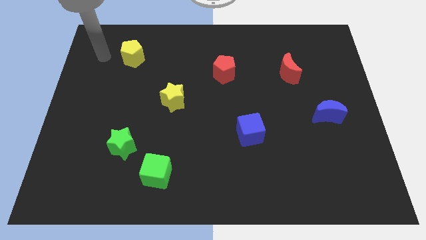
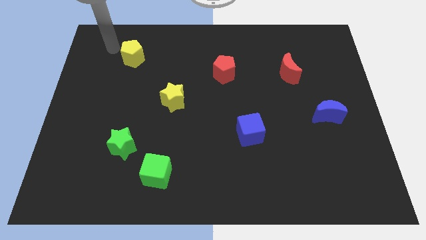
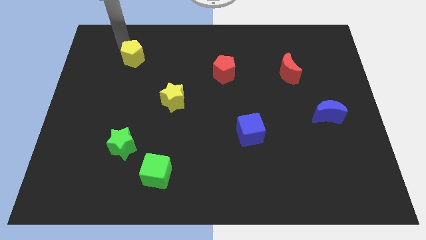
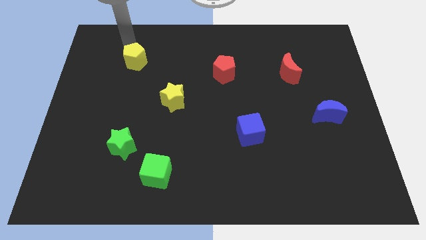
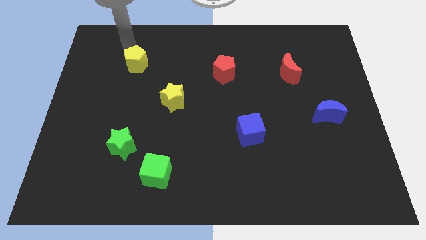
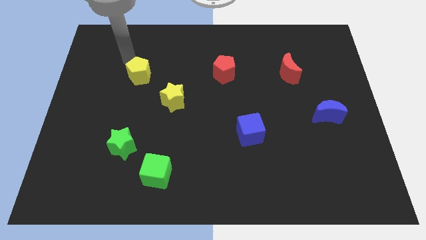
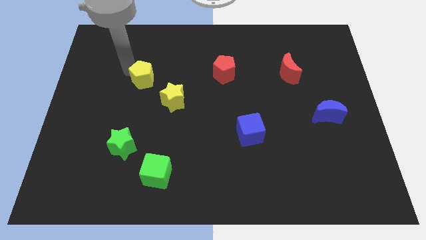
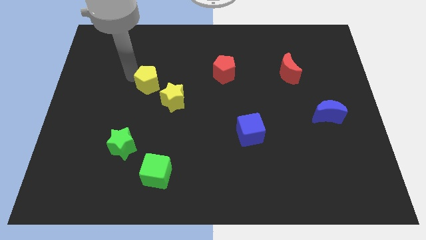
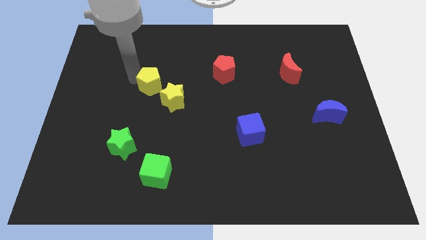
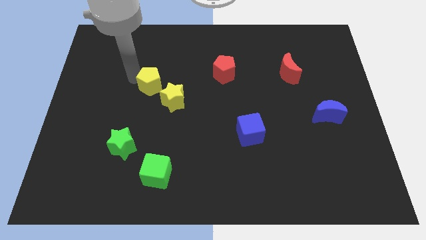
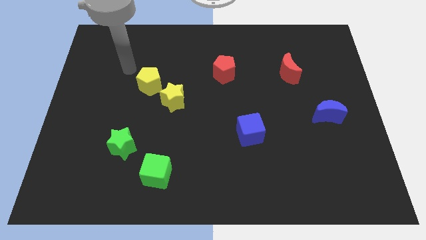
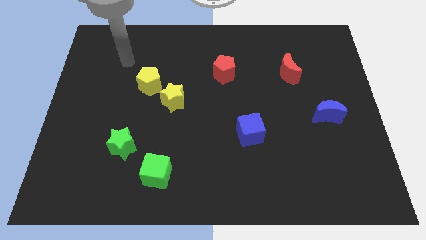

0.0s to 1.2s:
push the yellow pentagon above the yellow star

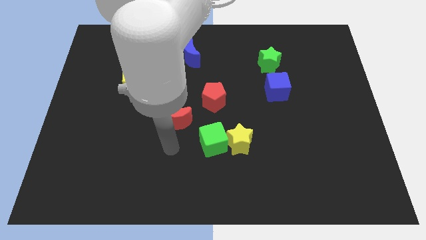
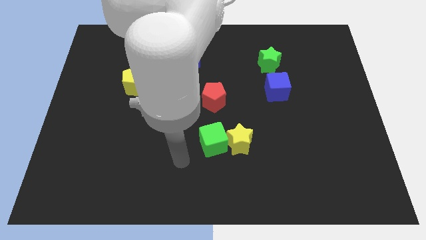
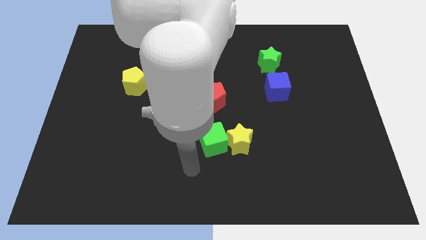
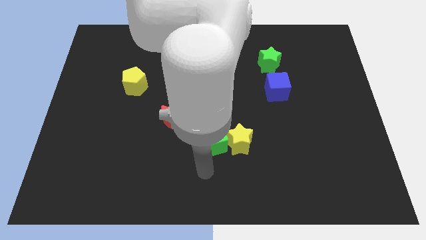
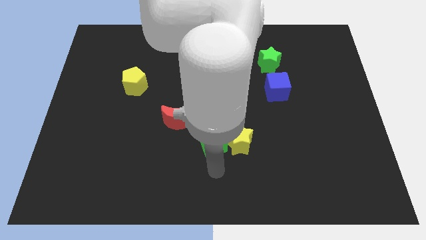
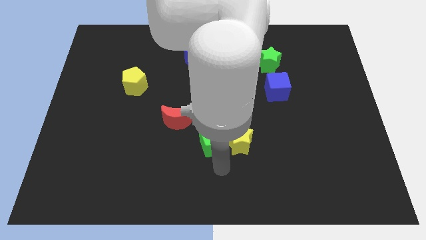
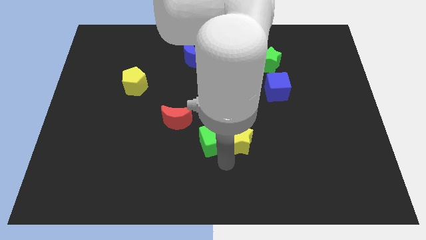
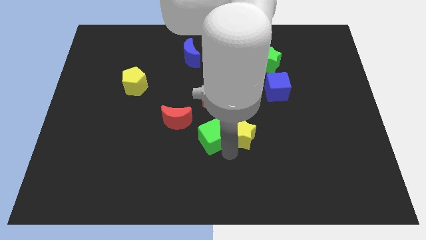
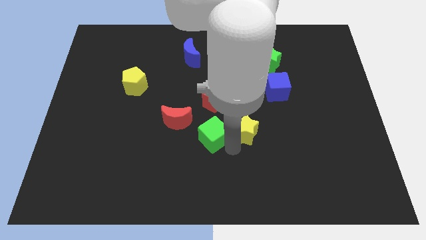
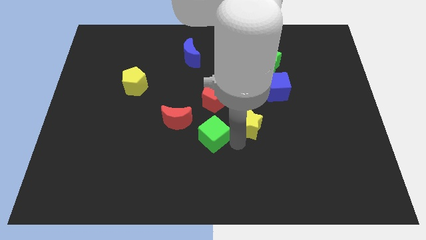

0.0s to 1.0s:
move the arm slightly to the yellow star

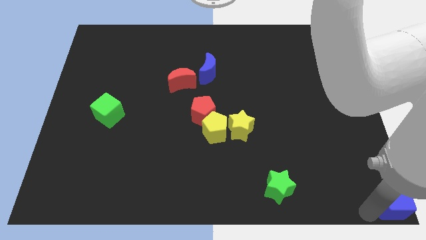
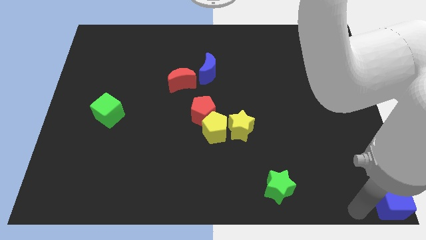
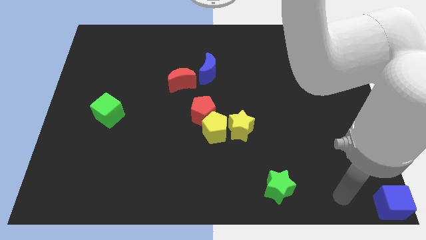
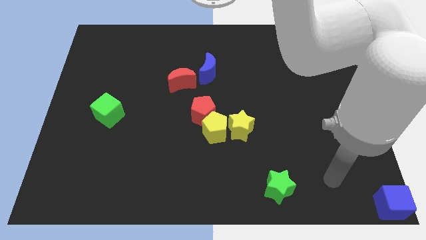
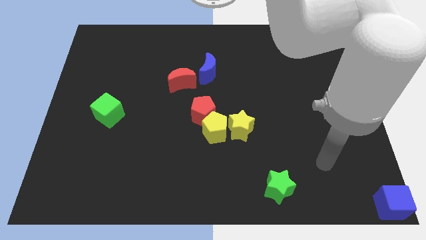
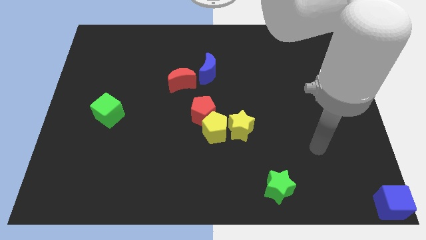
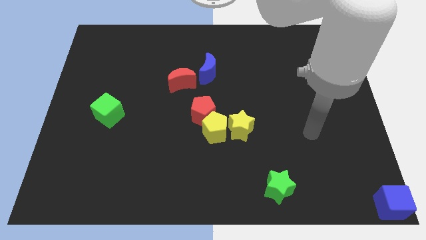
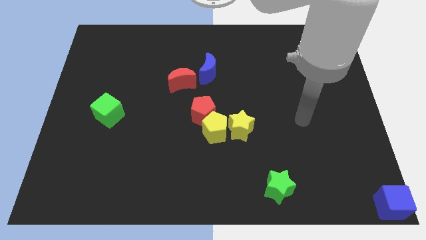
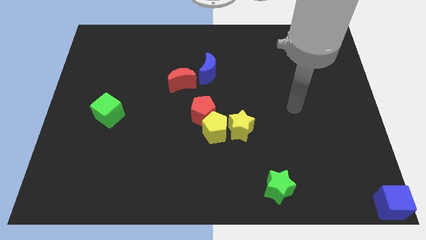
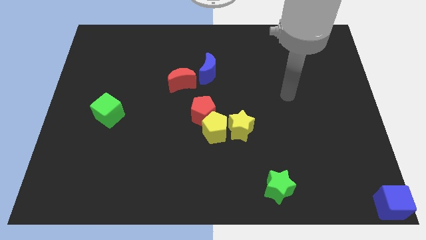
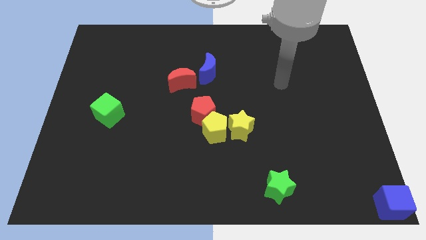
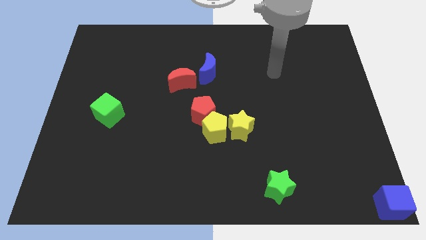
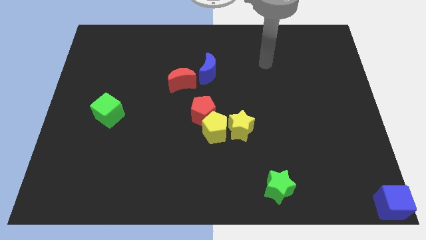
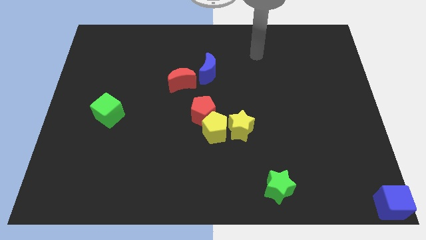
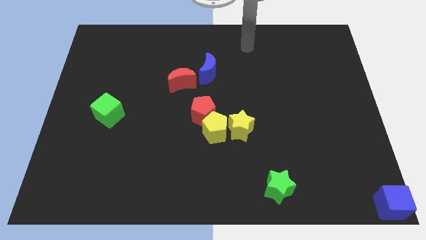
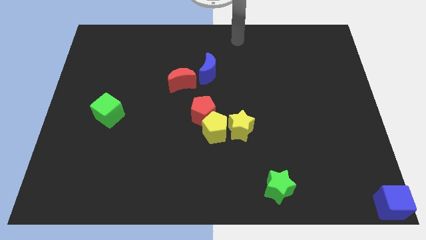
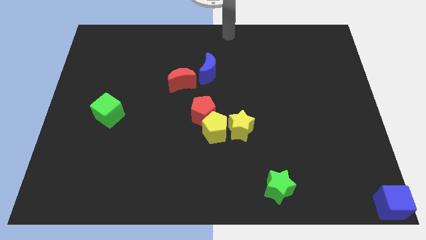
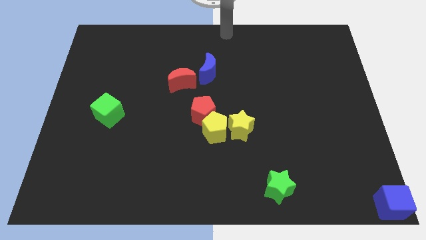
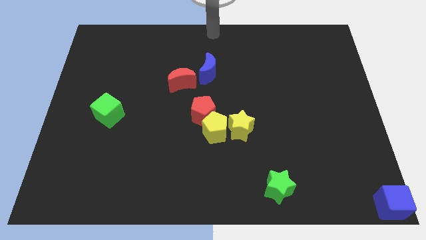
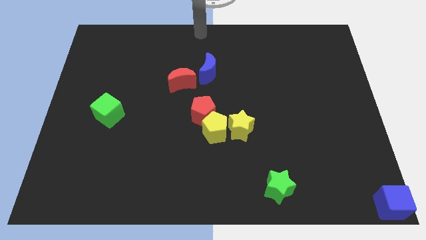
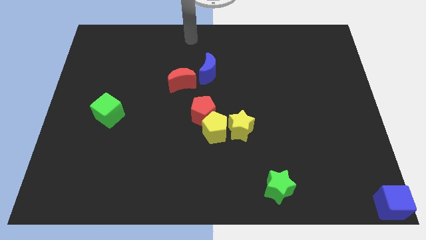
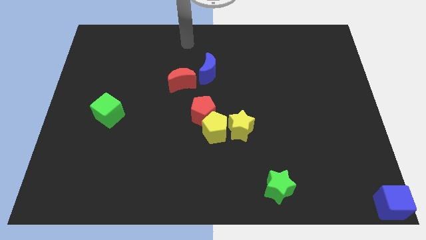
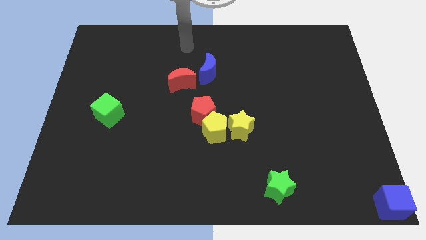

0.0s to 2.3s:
move your arms towards blue cell

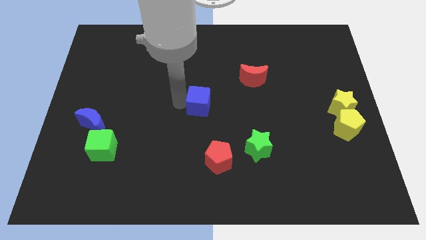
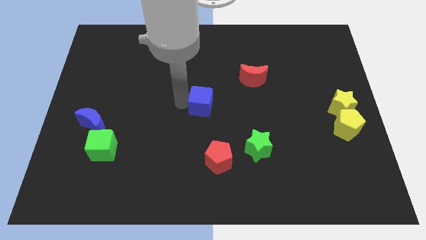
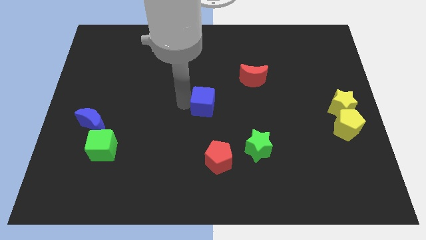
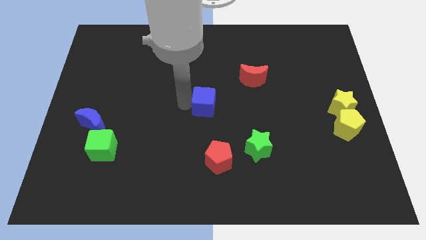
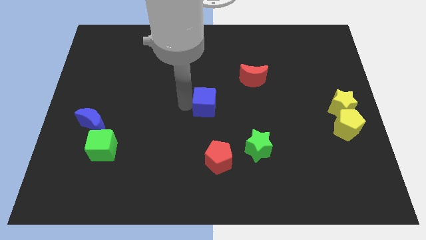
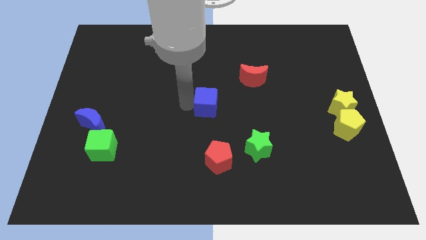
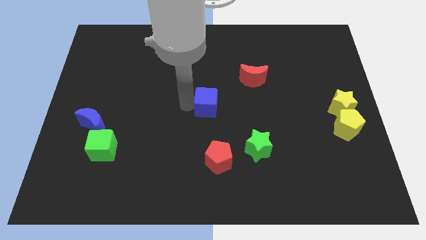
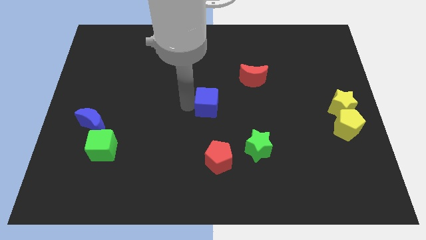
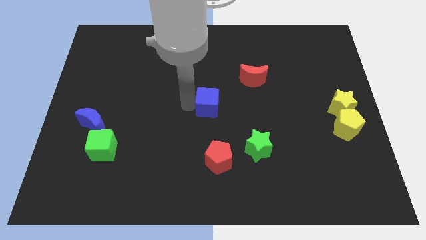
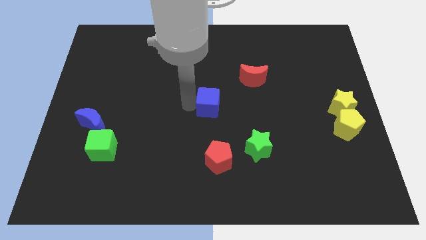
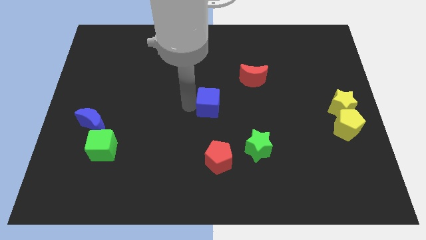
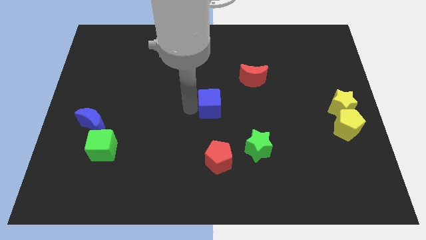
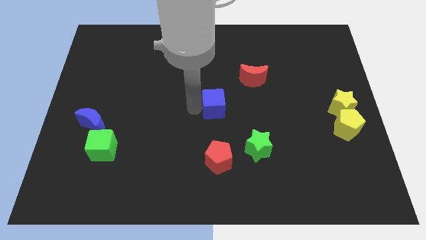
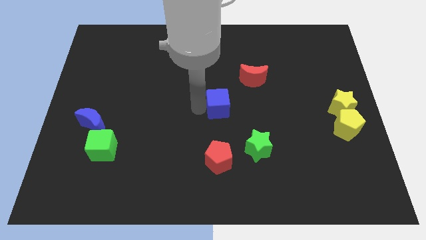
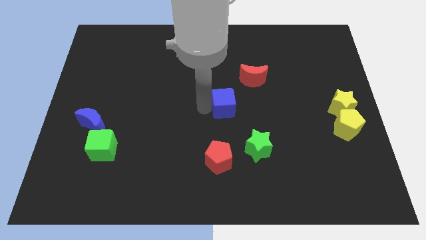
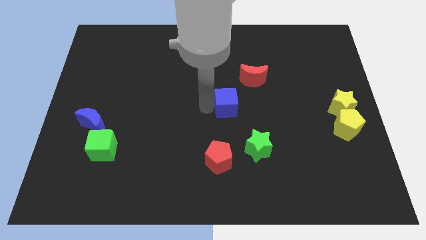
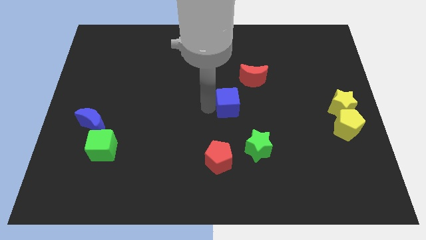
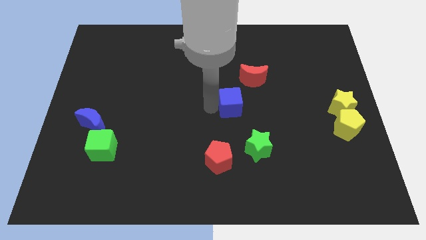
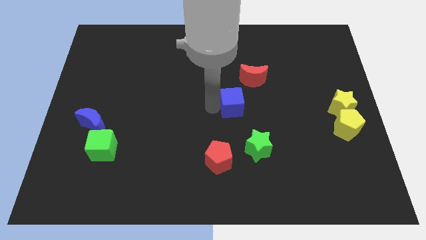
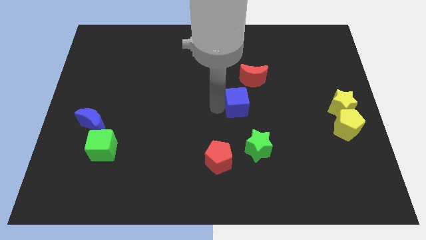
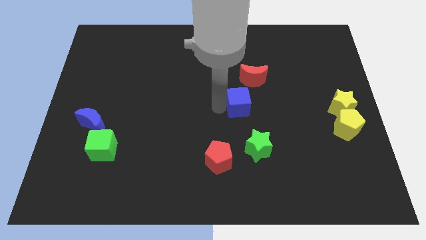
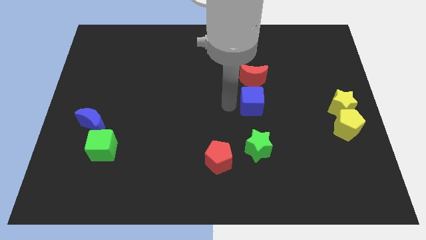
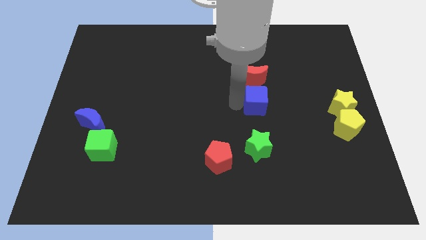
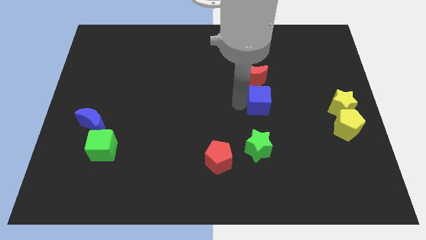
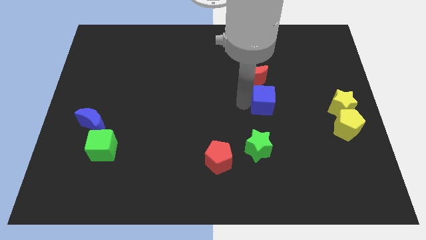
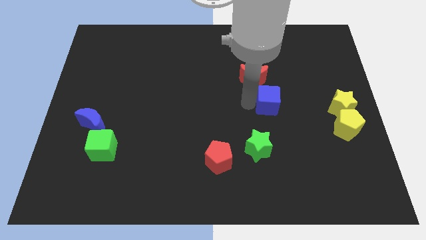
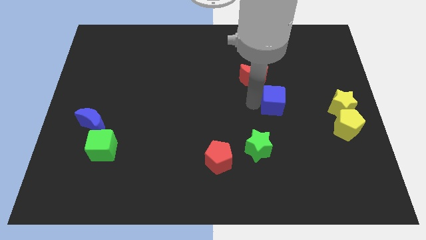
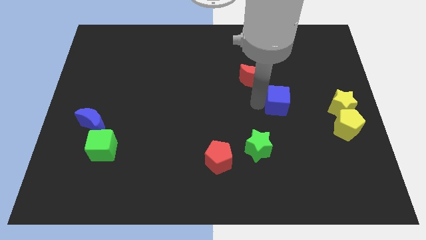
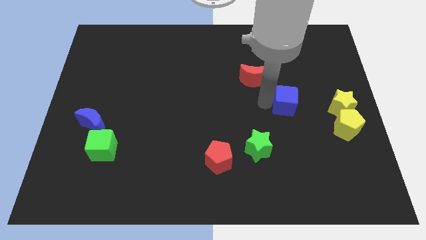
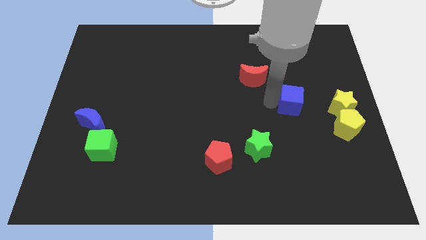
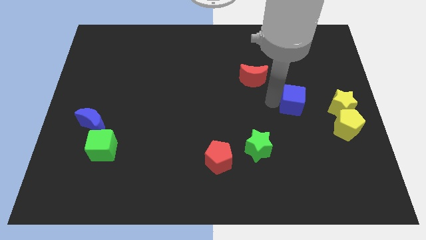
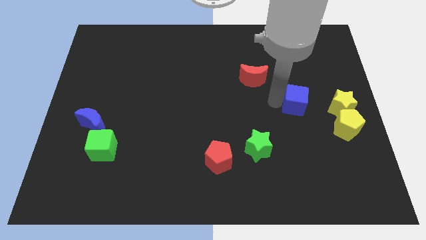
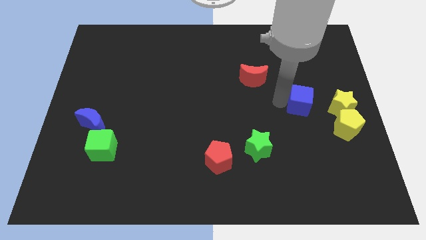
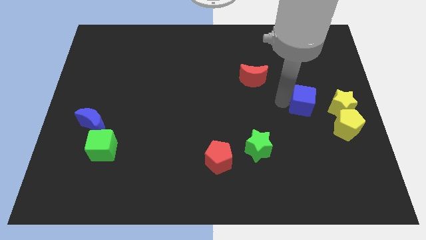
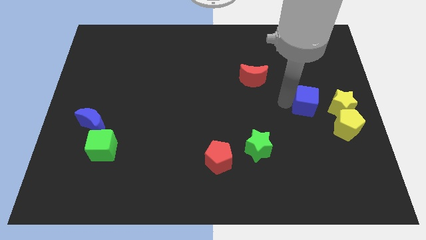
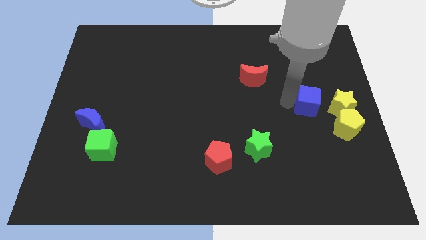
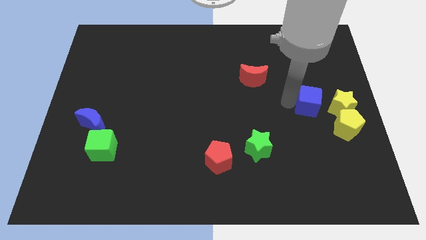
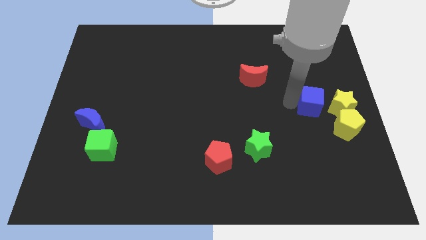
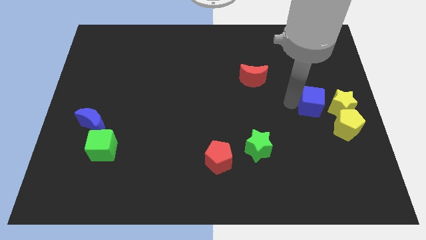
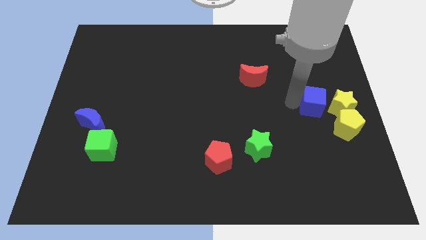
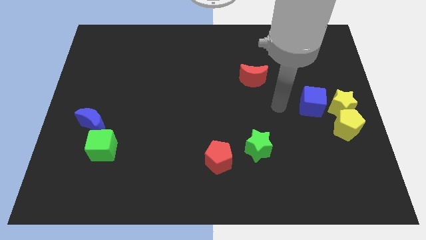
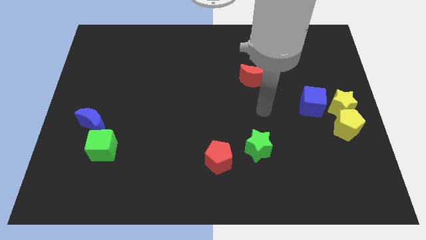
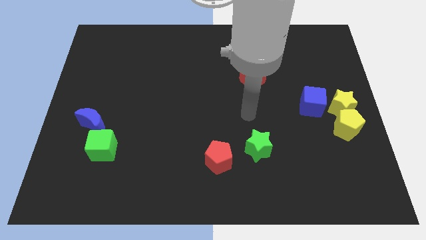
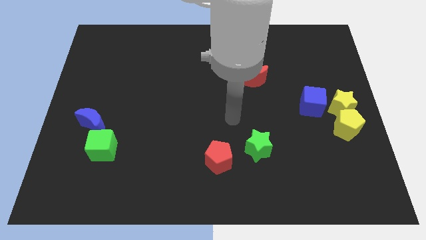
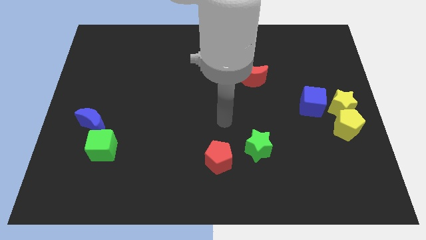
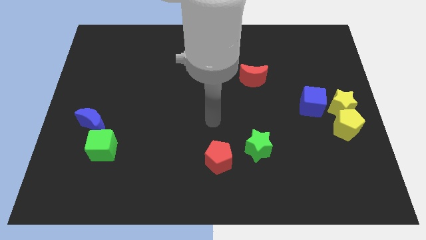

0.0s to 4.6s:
push the blue cube to the left of the yellow star
